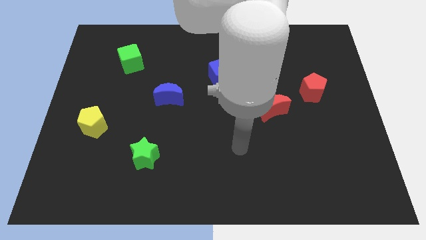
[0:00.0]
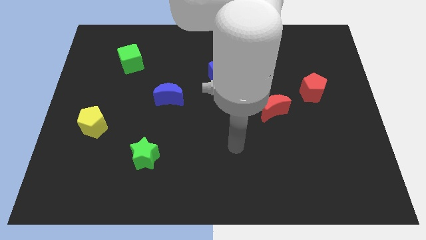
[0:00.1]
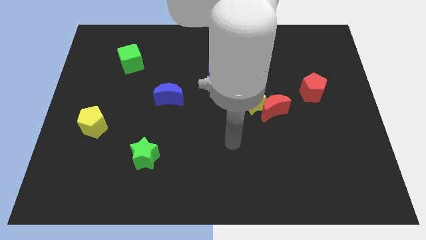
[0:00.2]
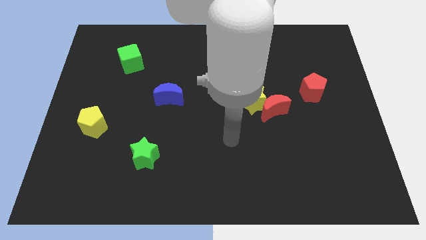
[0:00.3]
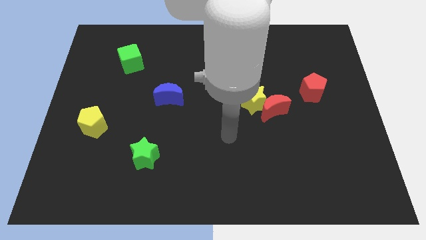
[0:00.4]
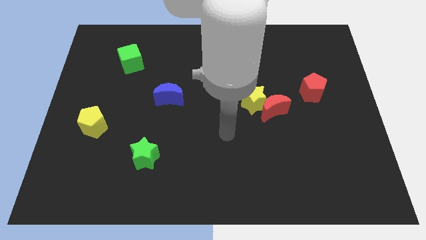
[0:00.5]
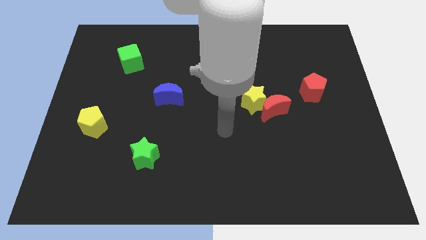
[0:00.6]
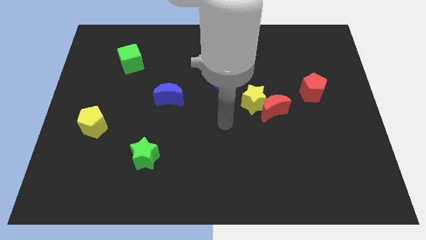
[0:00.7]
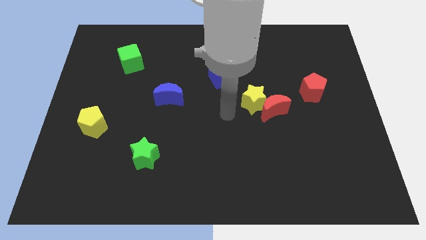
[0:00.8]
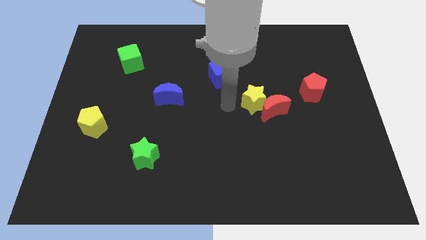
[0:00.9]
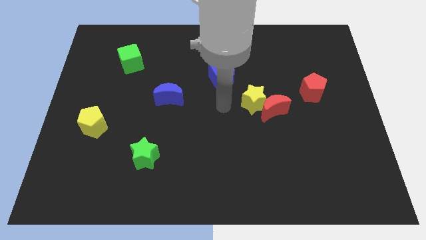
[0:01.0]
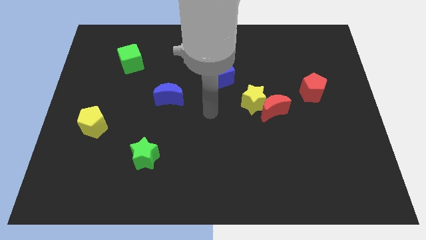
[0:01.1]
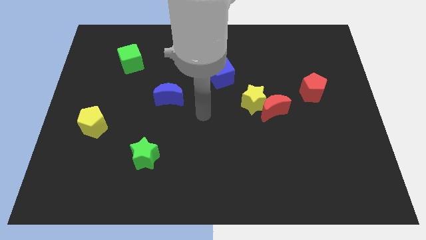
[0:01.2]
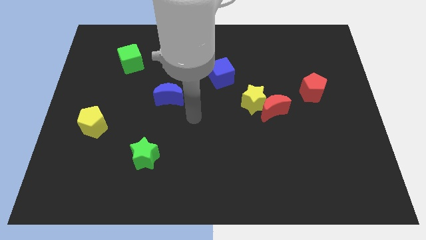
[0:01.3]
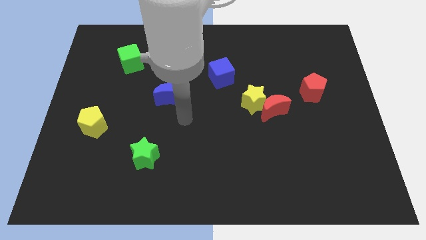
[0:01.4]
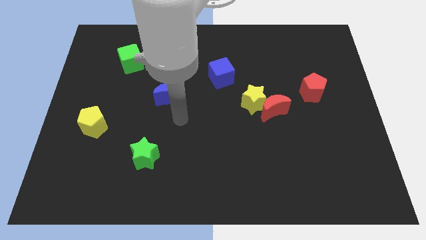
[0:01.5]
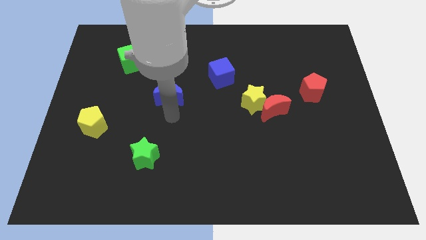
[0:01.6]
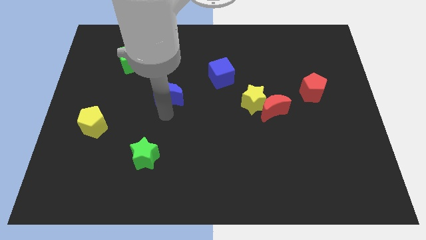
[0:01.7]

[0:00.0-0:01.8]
move the arm to the bottom side of the blue moon

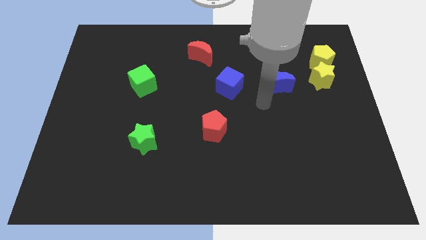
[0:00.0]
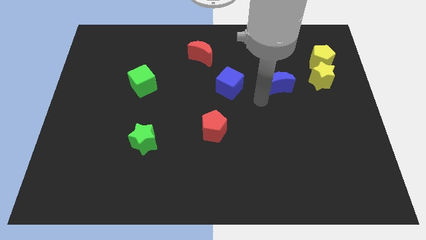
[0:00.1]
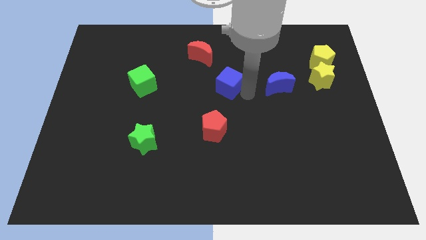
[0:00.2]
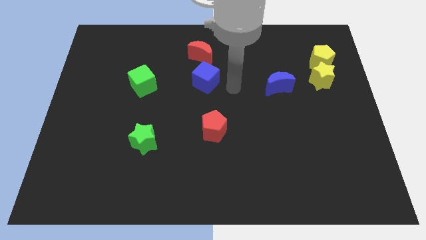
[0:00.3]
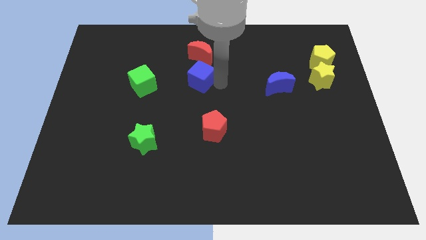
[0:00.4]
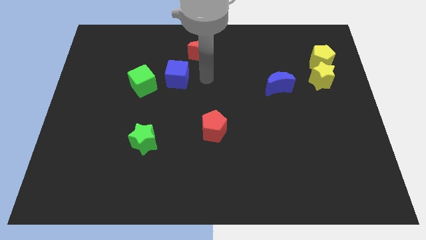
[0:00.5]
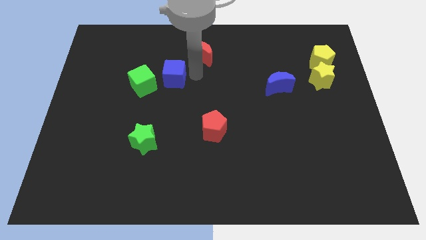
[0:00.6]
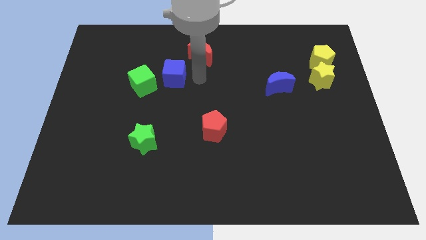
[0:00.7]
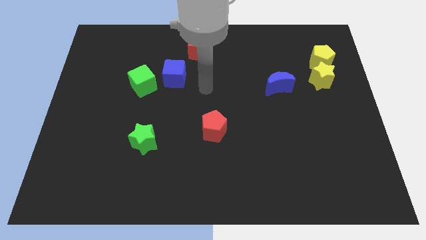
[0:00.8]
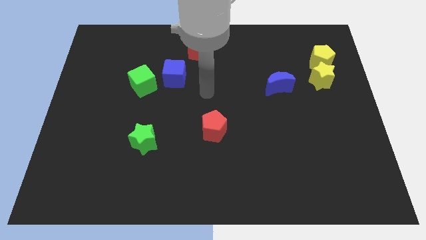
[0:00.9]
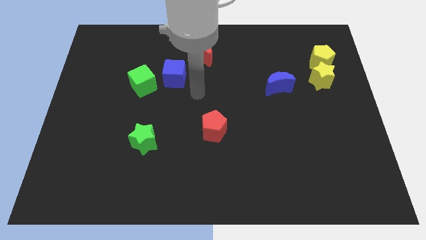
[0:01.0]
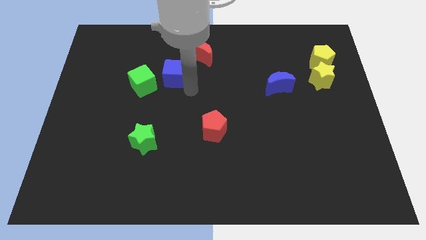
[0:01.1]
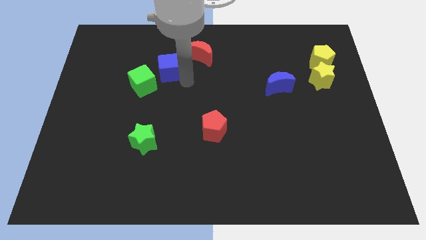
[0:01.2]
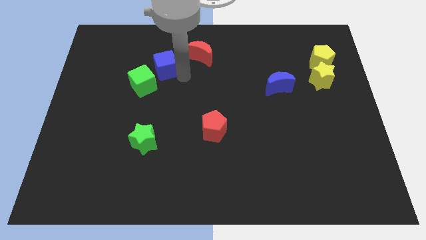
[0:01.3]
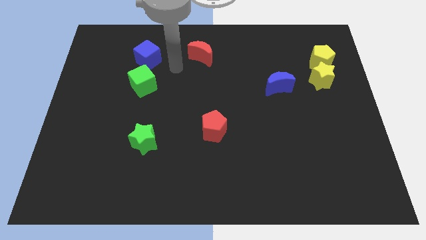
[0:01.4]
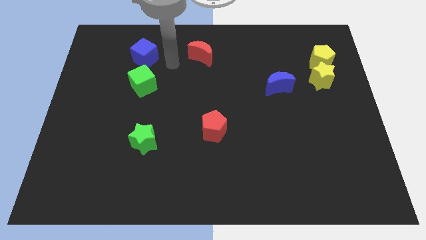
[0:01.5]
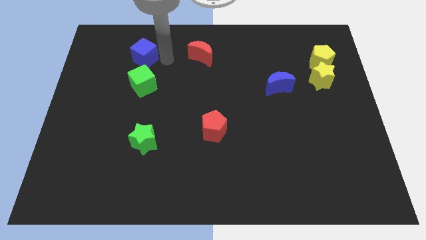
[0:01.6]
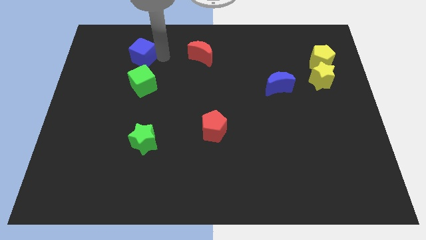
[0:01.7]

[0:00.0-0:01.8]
push the blue cube towards the top left of the board

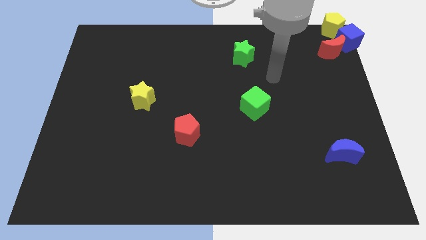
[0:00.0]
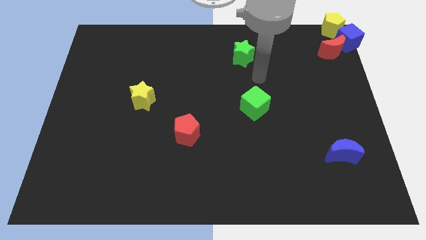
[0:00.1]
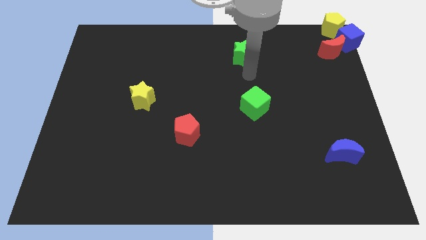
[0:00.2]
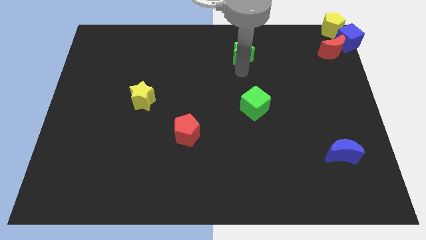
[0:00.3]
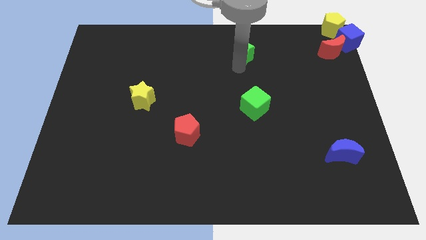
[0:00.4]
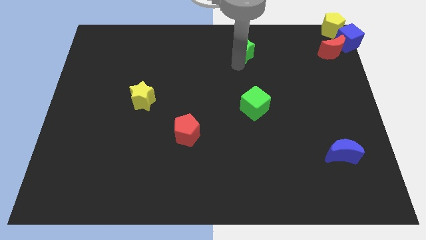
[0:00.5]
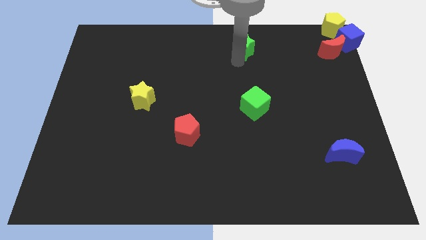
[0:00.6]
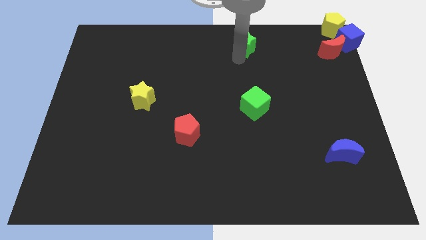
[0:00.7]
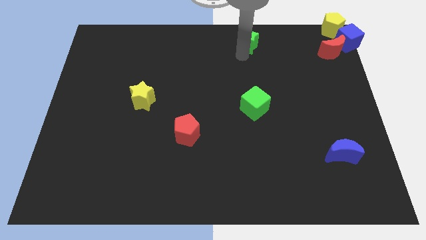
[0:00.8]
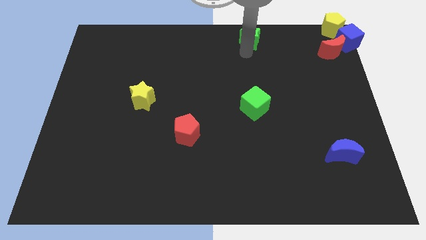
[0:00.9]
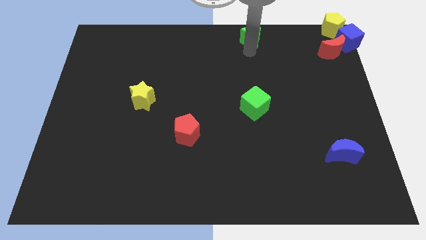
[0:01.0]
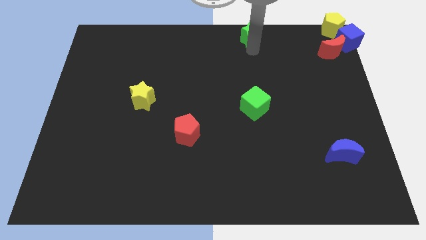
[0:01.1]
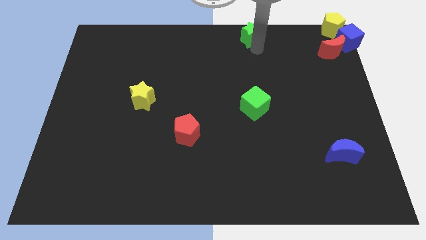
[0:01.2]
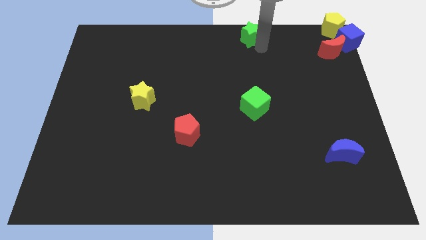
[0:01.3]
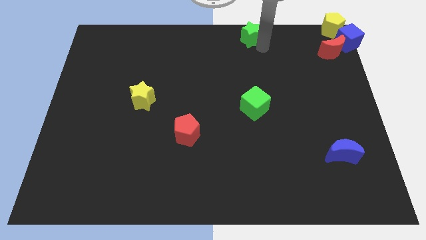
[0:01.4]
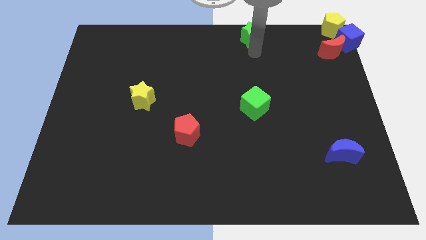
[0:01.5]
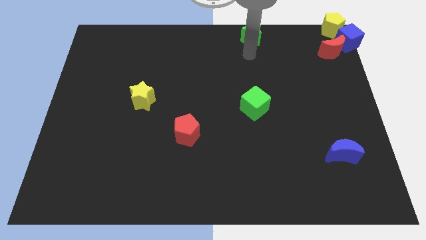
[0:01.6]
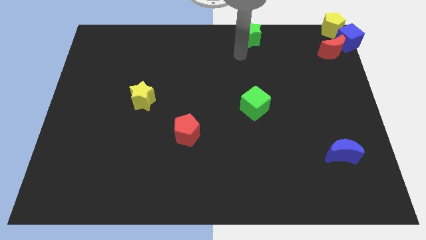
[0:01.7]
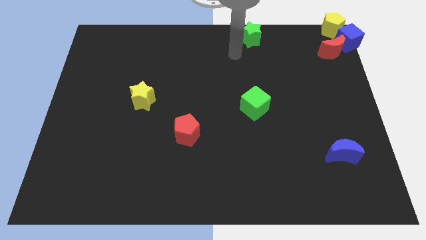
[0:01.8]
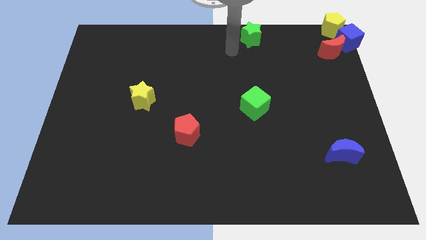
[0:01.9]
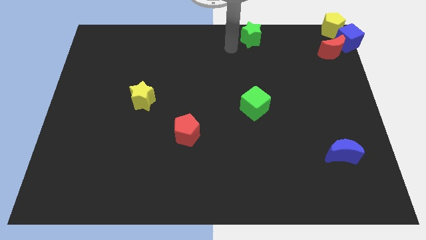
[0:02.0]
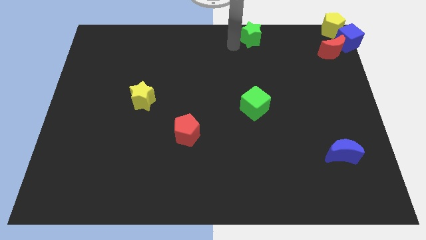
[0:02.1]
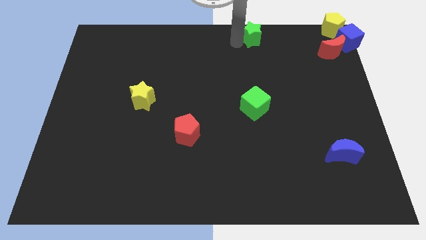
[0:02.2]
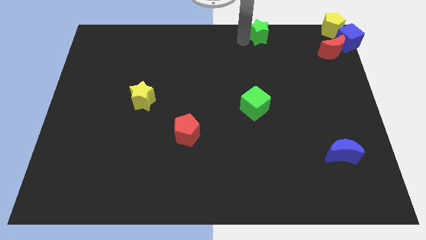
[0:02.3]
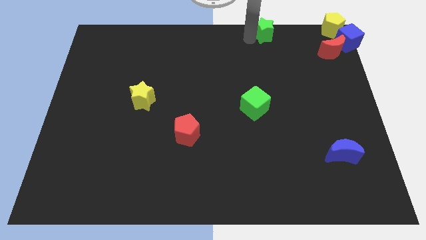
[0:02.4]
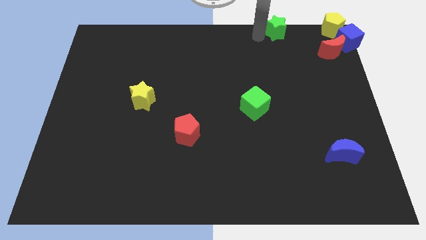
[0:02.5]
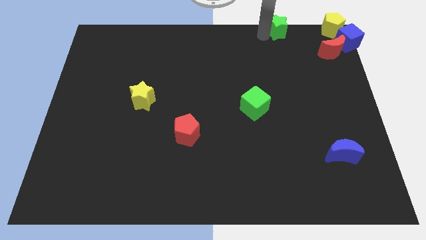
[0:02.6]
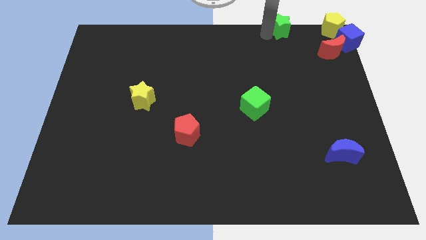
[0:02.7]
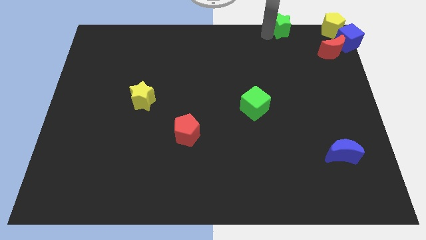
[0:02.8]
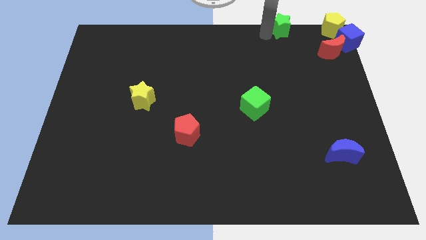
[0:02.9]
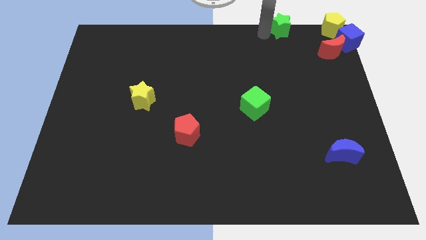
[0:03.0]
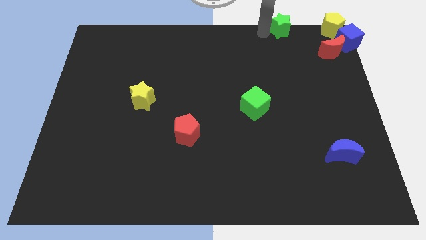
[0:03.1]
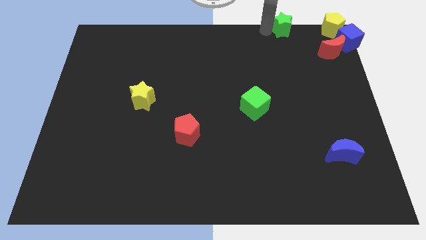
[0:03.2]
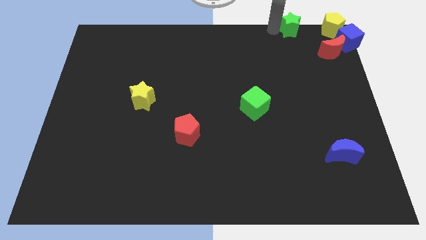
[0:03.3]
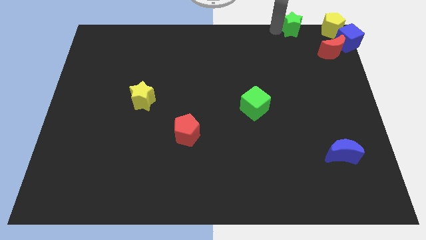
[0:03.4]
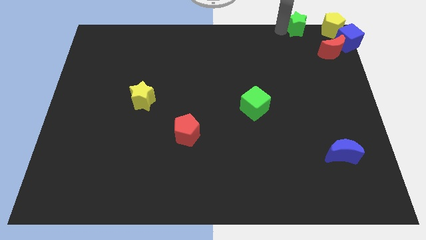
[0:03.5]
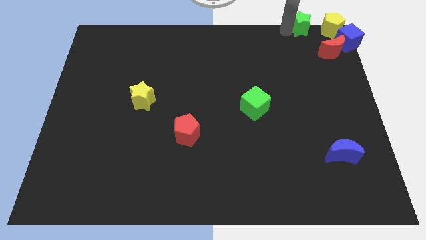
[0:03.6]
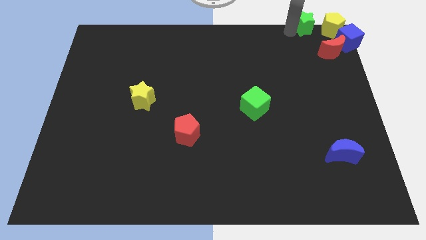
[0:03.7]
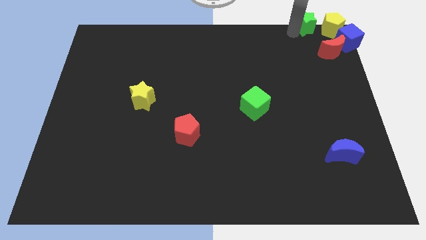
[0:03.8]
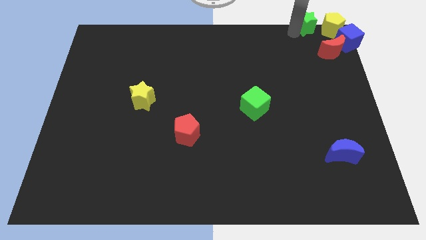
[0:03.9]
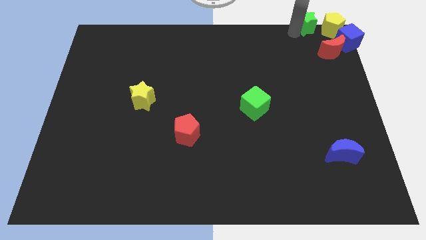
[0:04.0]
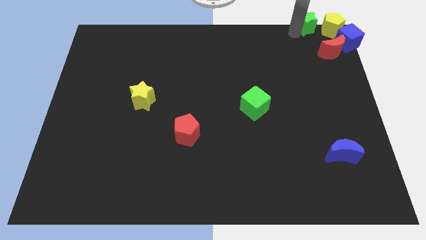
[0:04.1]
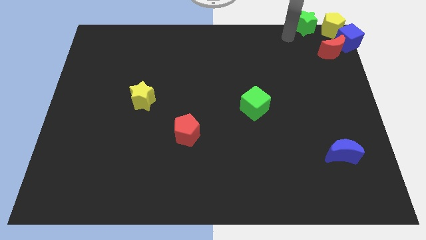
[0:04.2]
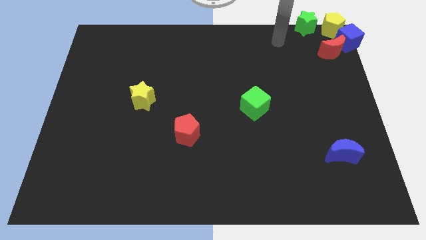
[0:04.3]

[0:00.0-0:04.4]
move the green star to the left side of the yellow pentagon

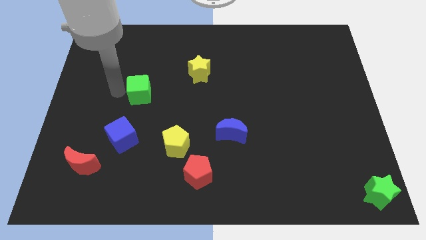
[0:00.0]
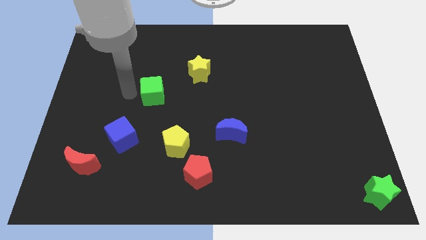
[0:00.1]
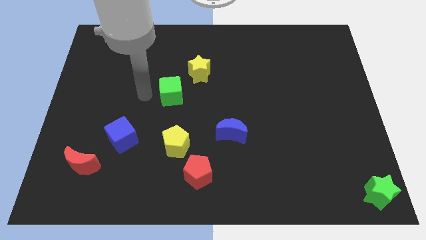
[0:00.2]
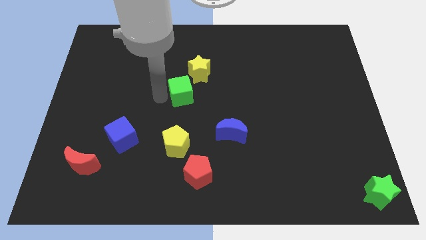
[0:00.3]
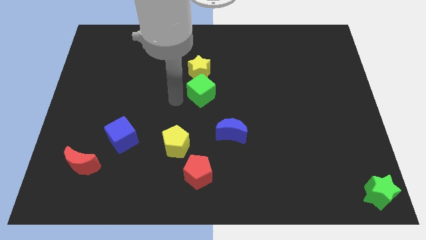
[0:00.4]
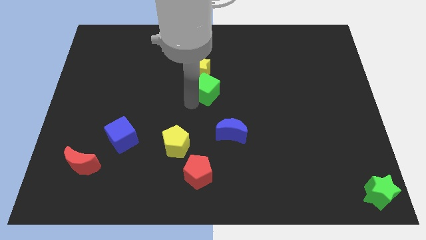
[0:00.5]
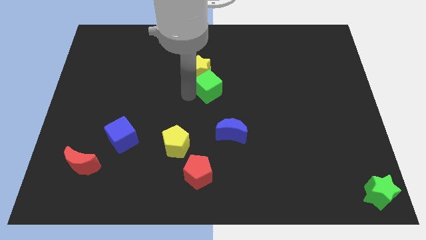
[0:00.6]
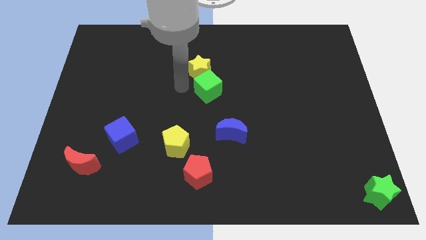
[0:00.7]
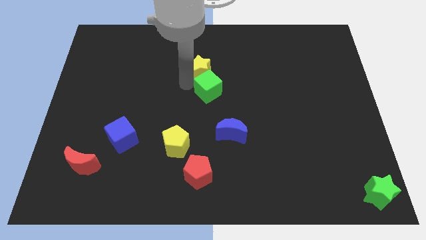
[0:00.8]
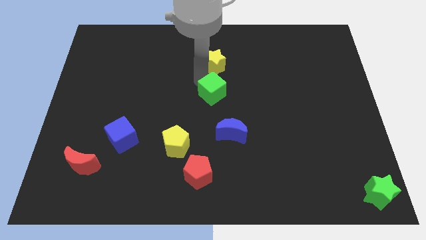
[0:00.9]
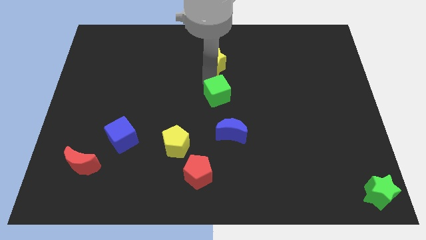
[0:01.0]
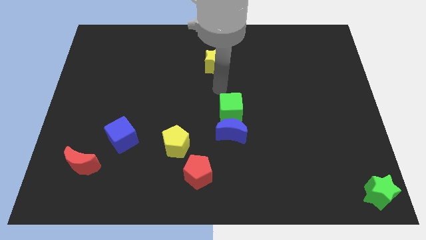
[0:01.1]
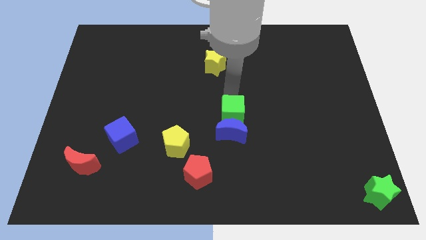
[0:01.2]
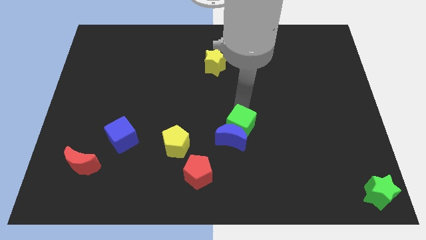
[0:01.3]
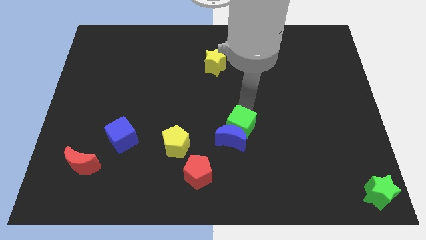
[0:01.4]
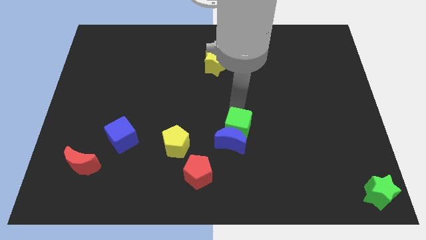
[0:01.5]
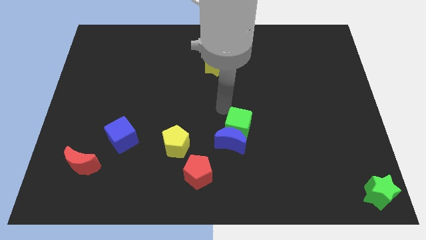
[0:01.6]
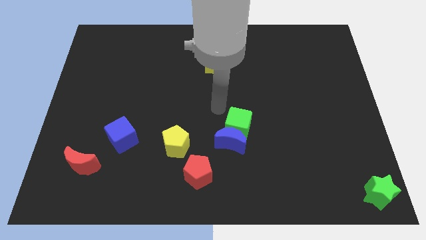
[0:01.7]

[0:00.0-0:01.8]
push the green cube into the blue crescent at the bottom center of the board
